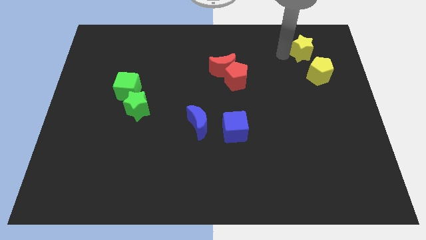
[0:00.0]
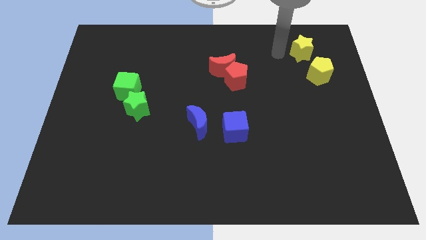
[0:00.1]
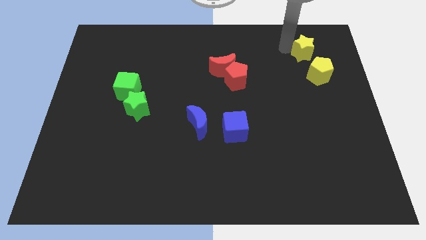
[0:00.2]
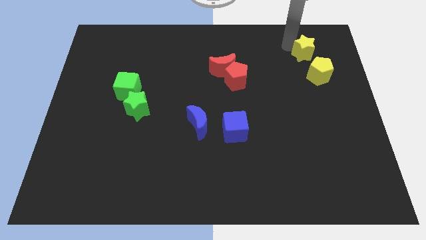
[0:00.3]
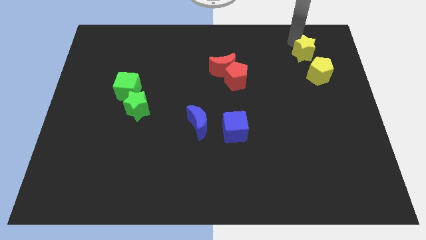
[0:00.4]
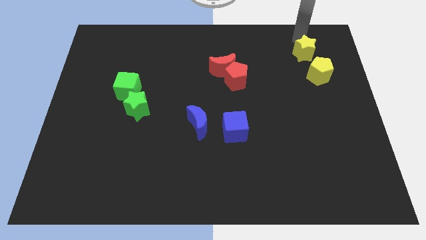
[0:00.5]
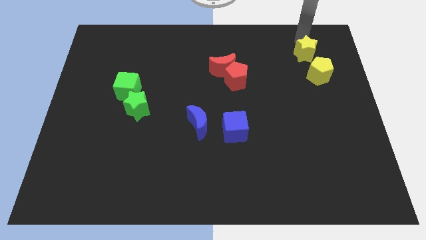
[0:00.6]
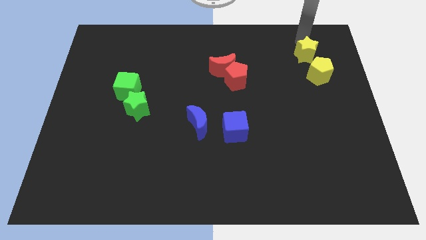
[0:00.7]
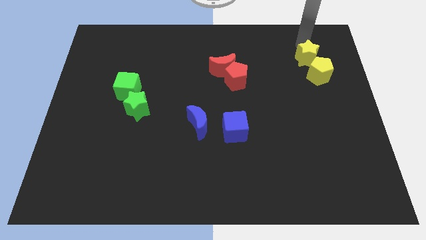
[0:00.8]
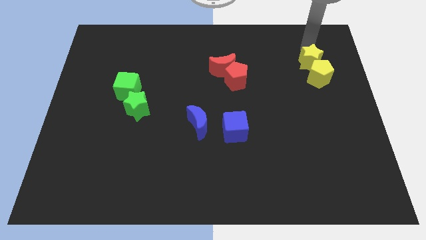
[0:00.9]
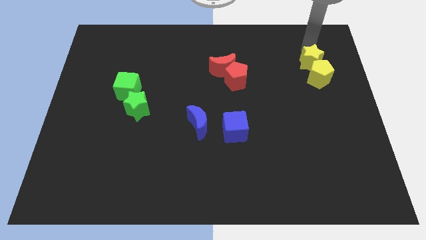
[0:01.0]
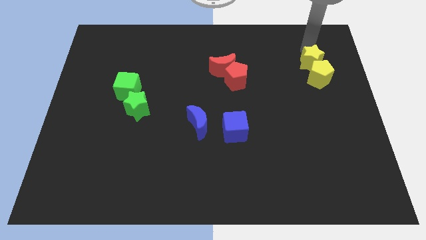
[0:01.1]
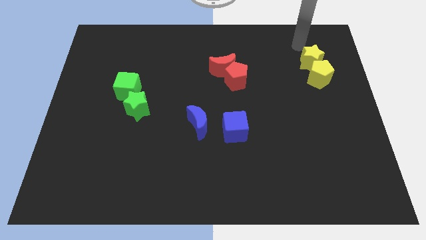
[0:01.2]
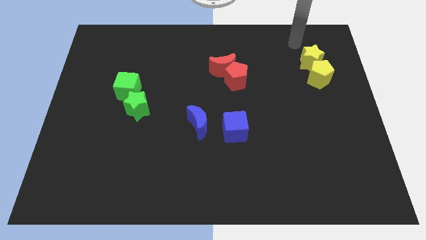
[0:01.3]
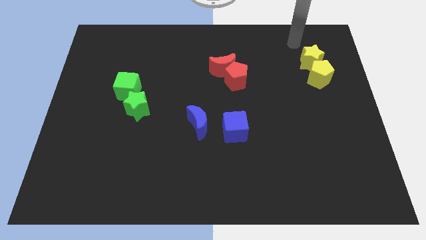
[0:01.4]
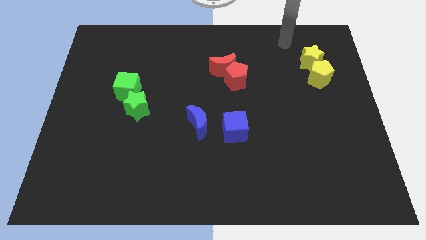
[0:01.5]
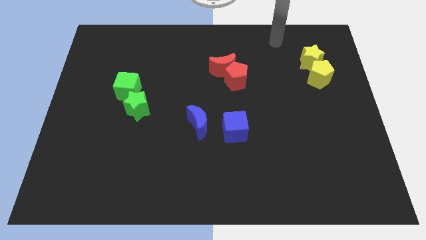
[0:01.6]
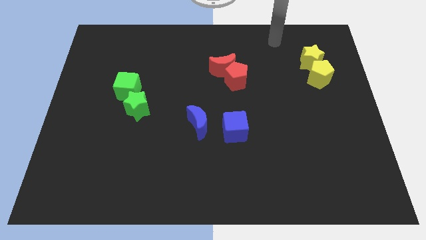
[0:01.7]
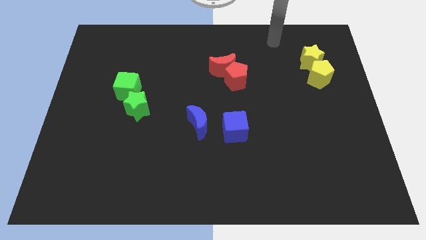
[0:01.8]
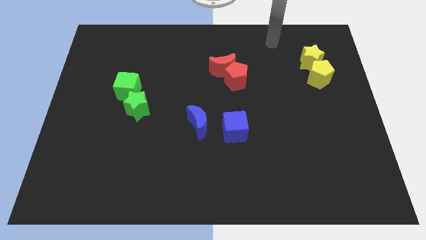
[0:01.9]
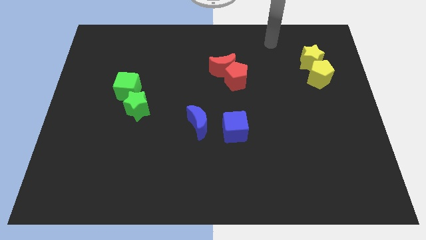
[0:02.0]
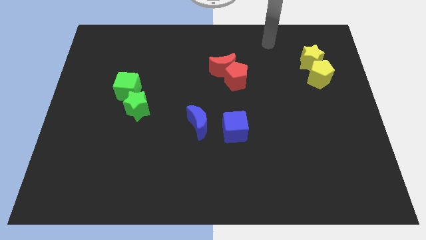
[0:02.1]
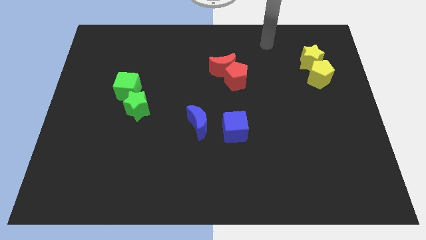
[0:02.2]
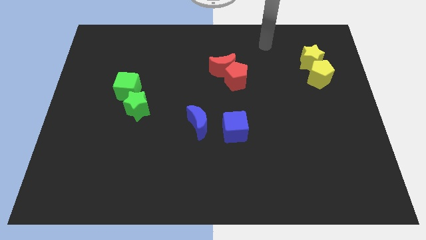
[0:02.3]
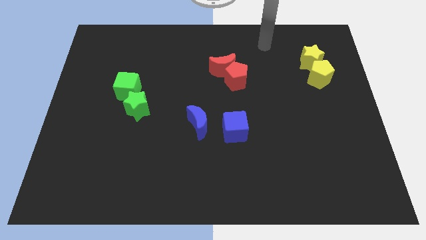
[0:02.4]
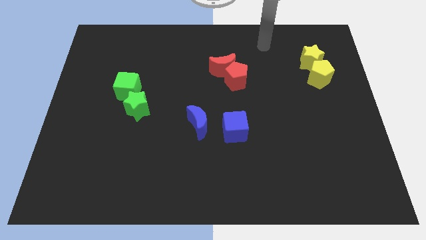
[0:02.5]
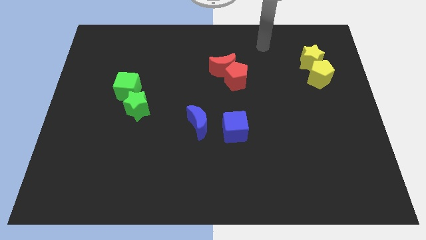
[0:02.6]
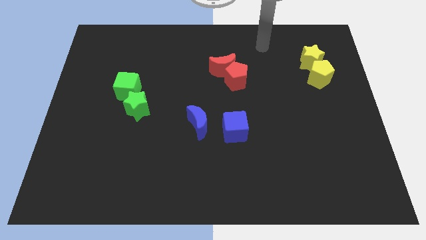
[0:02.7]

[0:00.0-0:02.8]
move yellow star in to yellow pentagon

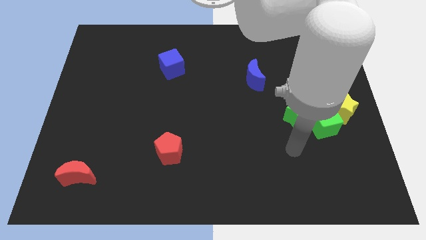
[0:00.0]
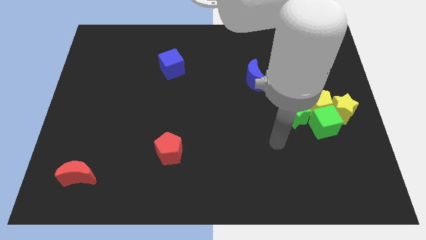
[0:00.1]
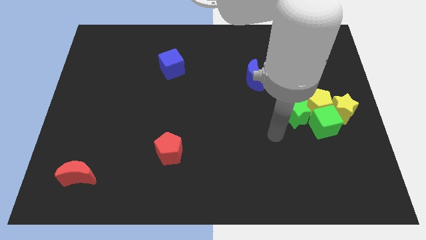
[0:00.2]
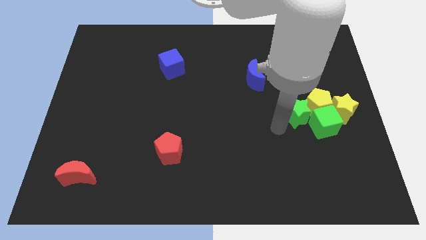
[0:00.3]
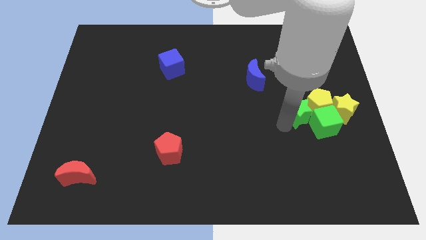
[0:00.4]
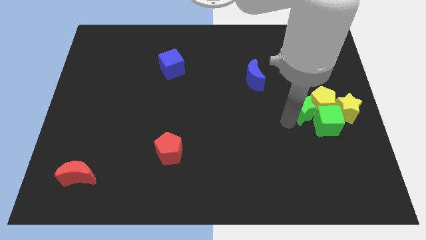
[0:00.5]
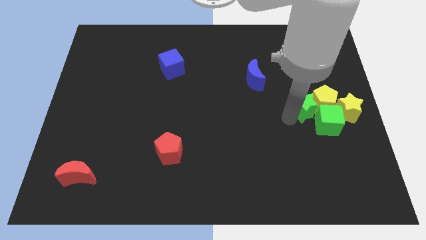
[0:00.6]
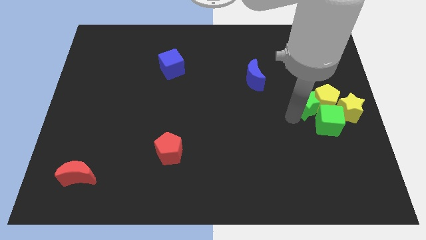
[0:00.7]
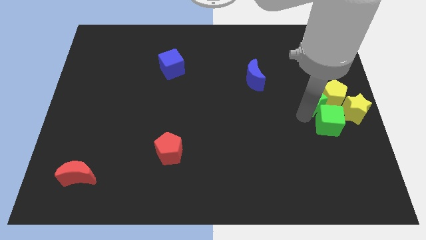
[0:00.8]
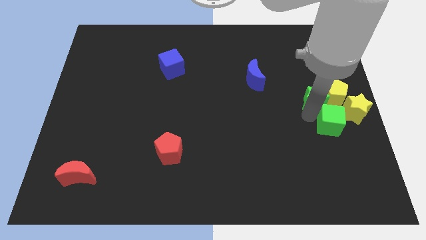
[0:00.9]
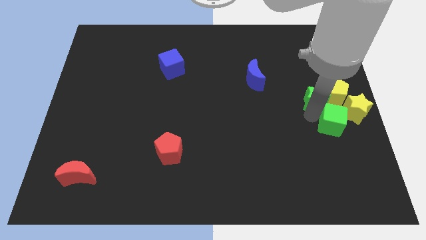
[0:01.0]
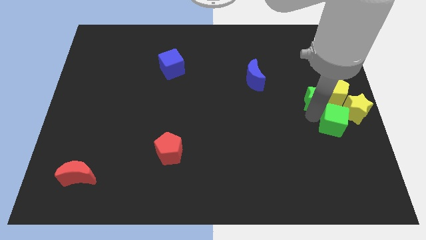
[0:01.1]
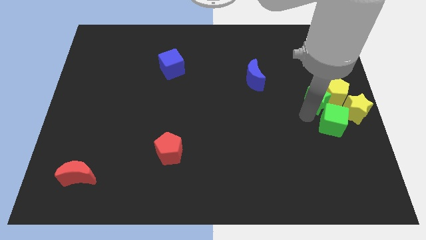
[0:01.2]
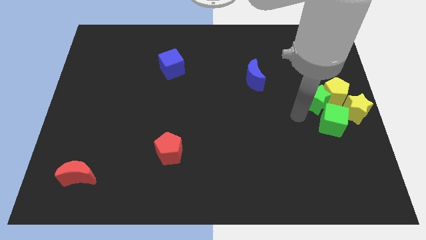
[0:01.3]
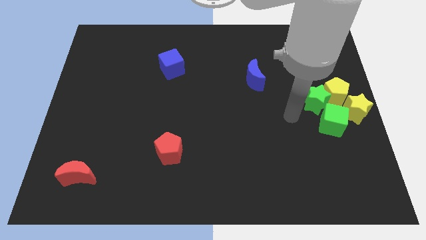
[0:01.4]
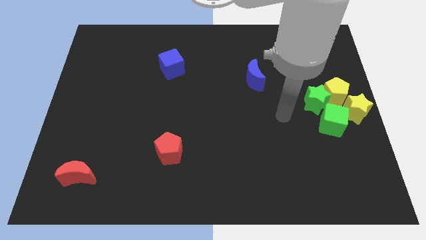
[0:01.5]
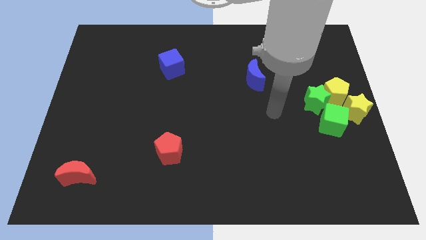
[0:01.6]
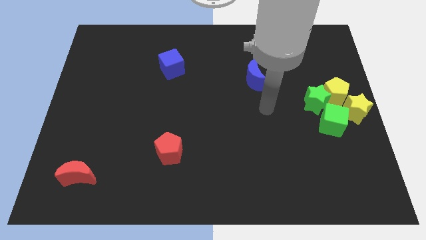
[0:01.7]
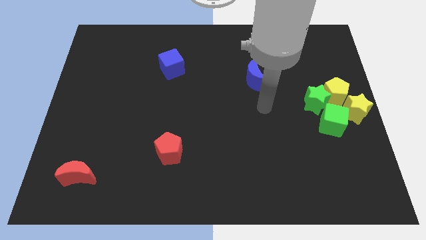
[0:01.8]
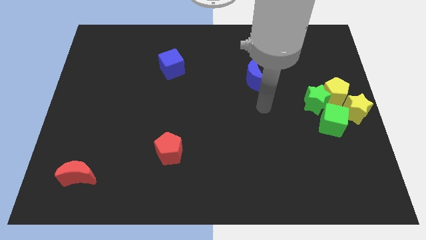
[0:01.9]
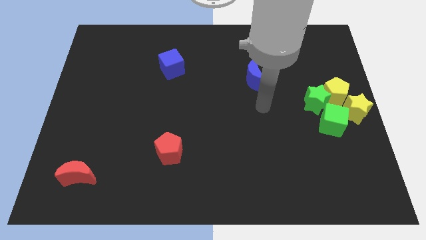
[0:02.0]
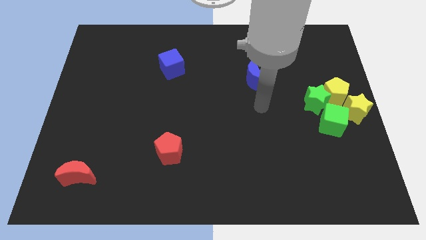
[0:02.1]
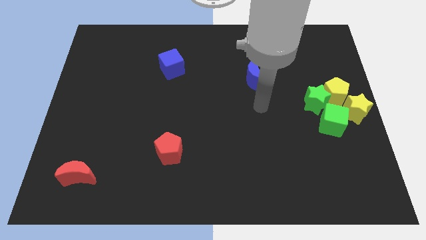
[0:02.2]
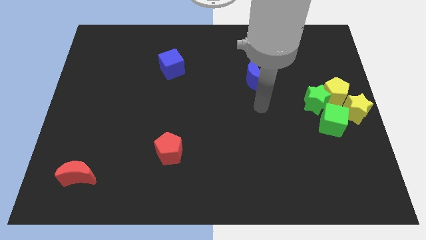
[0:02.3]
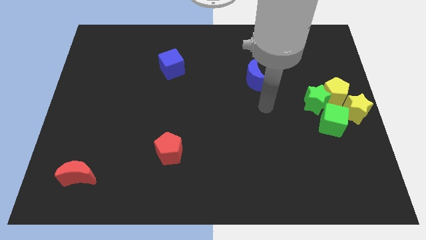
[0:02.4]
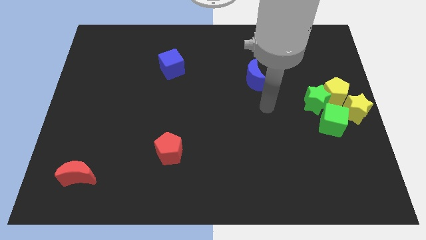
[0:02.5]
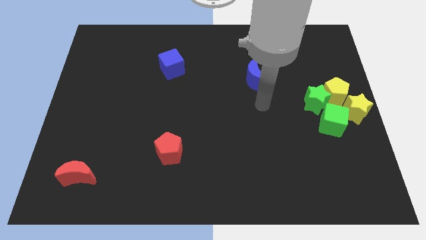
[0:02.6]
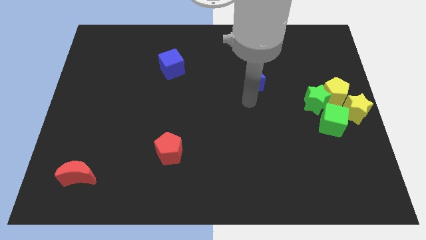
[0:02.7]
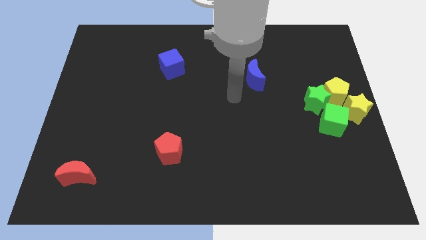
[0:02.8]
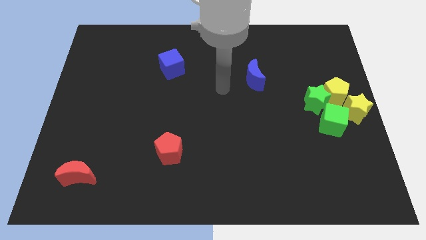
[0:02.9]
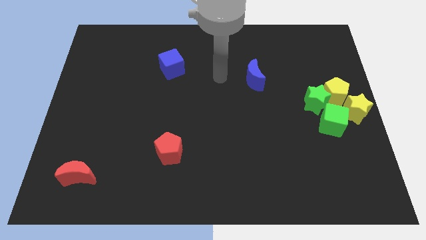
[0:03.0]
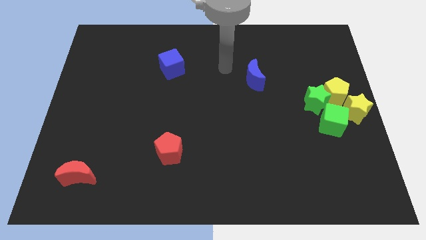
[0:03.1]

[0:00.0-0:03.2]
move all yellow and green blocks to the right center of the board

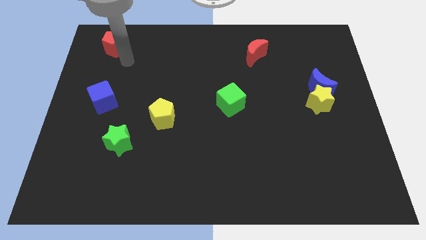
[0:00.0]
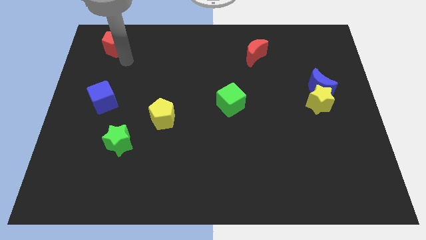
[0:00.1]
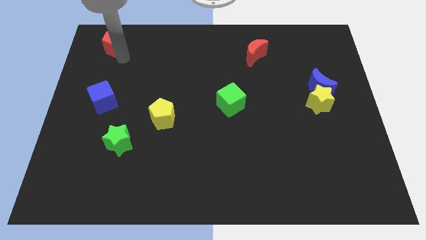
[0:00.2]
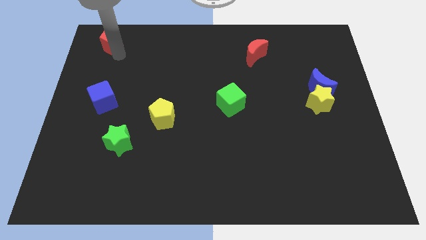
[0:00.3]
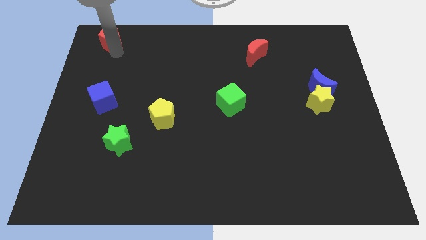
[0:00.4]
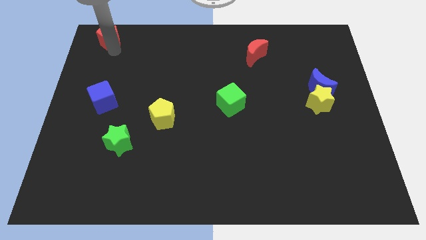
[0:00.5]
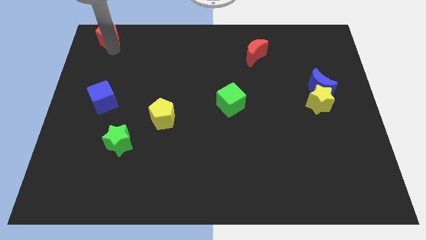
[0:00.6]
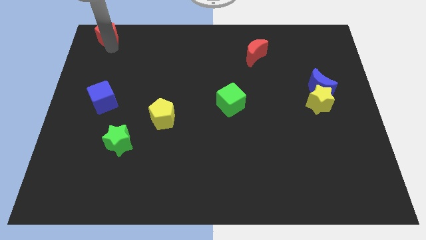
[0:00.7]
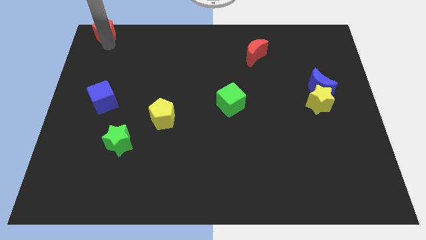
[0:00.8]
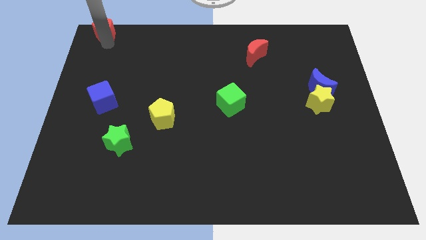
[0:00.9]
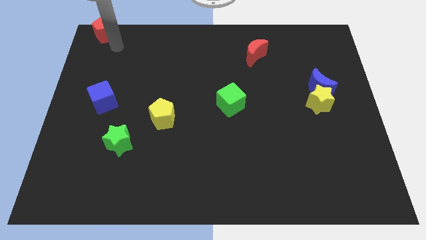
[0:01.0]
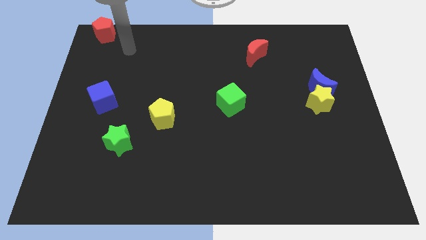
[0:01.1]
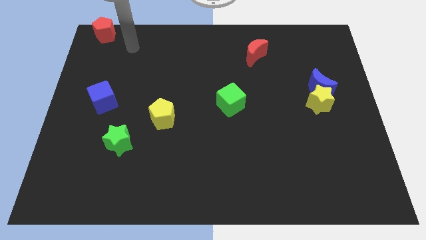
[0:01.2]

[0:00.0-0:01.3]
drag the red pentagon to the top left side of the board

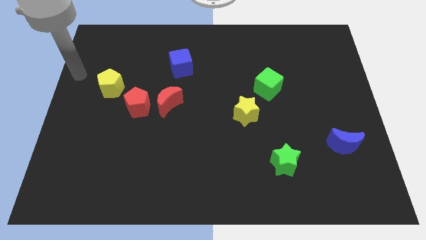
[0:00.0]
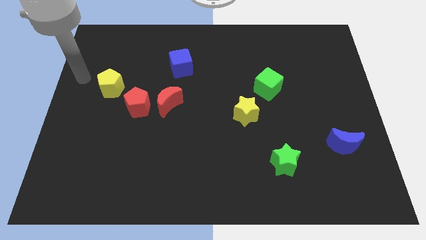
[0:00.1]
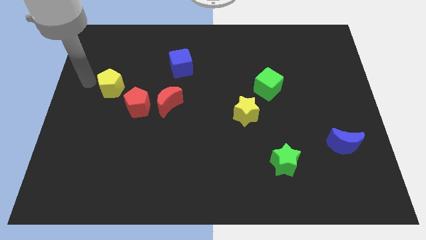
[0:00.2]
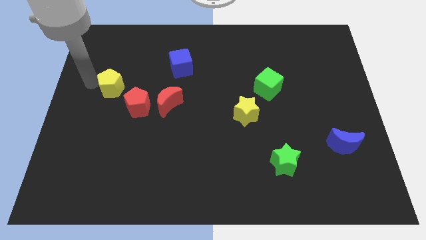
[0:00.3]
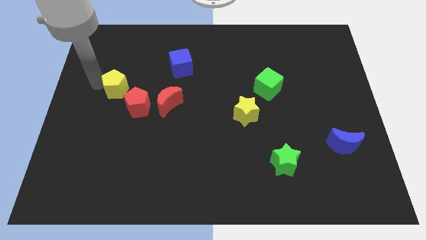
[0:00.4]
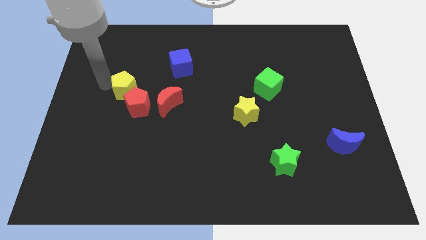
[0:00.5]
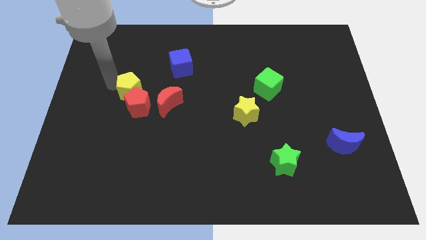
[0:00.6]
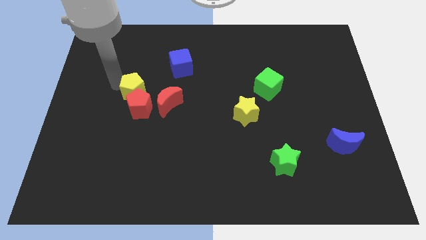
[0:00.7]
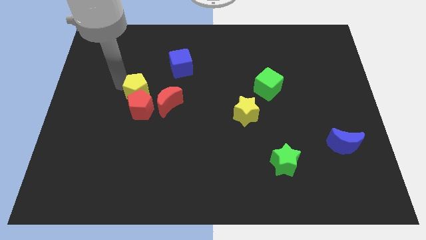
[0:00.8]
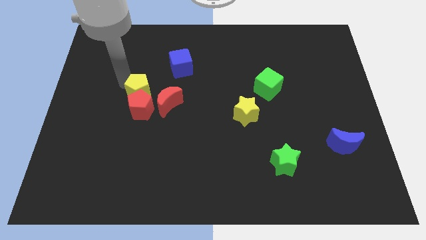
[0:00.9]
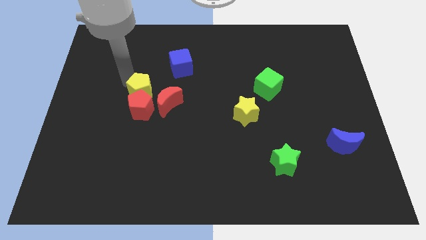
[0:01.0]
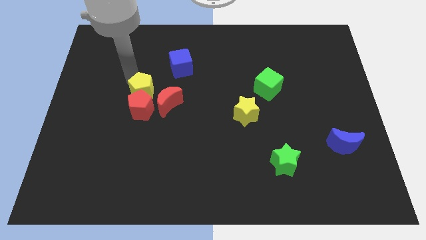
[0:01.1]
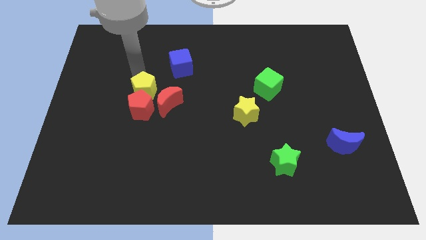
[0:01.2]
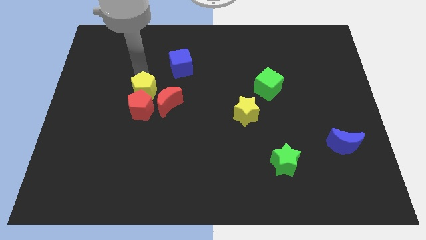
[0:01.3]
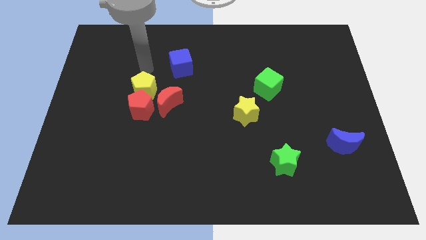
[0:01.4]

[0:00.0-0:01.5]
place the yellow pentagon above the red pentagon

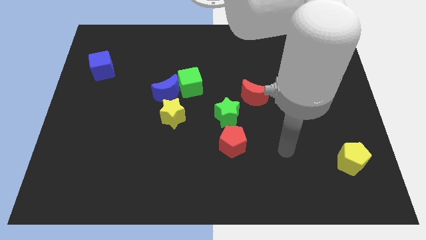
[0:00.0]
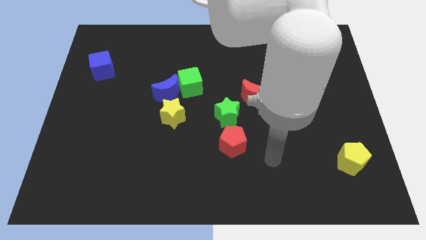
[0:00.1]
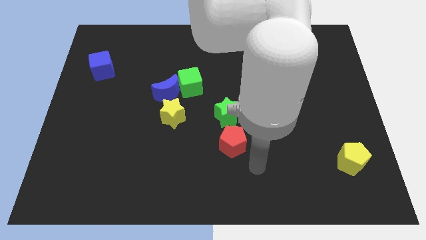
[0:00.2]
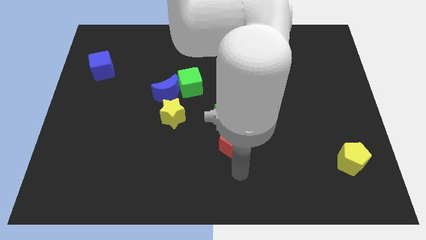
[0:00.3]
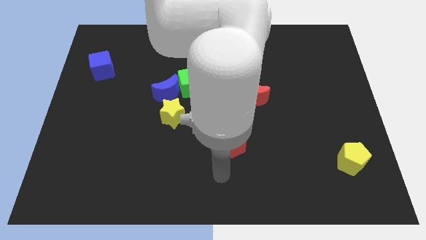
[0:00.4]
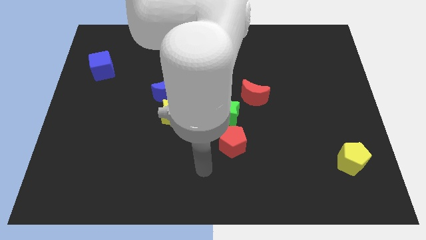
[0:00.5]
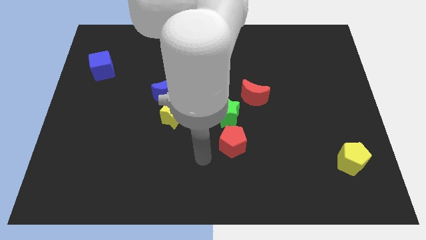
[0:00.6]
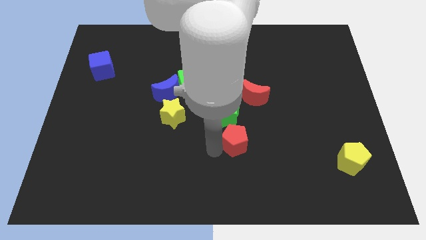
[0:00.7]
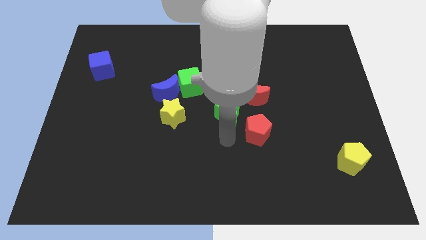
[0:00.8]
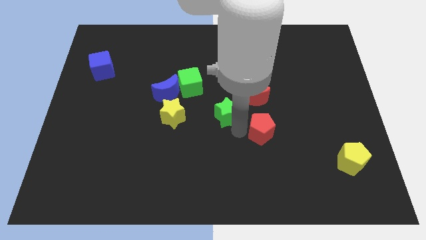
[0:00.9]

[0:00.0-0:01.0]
push red pentagon diagonal to yellow pentagon
